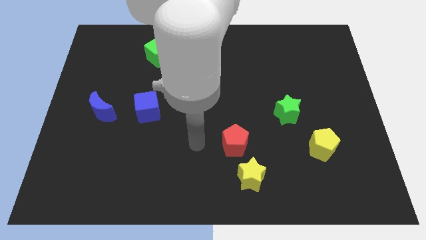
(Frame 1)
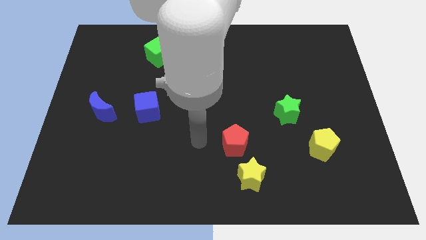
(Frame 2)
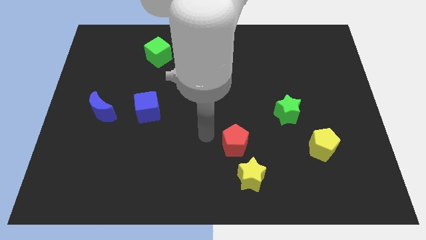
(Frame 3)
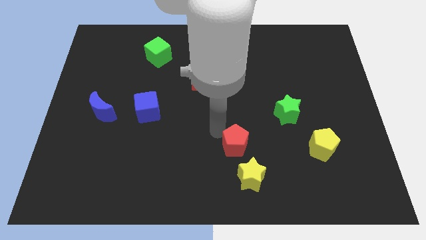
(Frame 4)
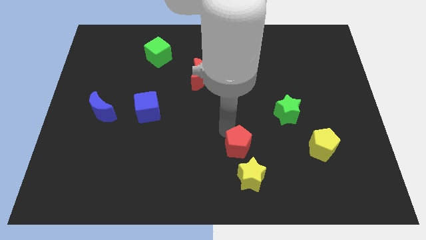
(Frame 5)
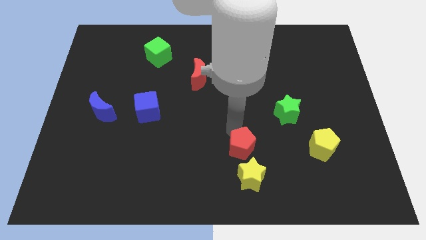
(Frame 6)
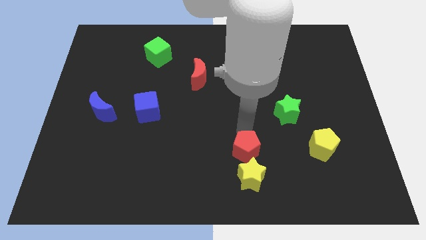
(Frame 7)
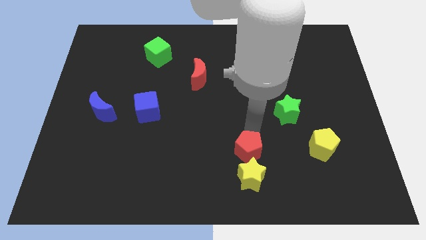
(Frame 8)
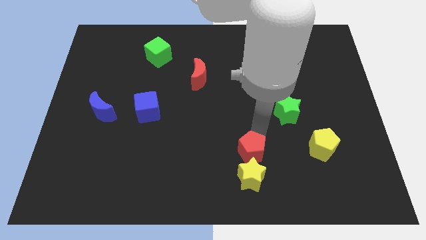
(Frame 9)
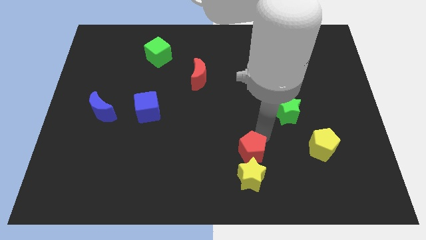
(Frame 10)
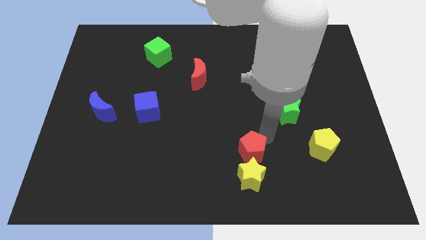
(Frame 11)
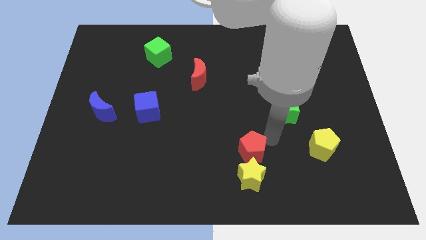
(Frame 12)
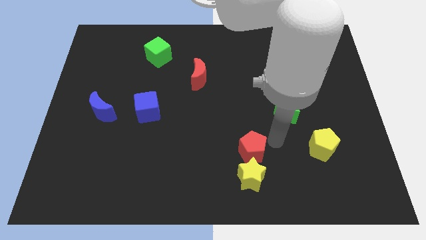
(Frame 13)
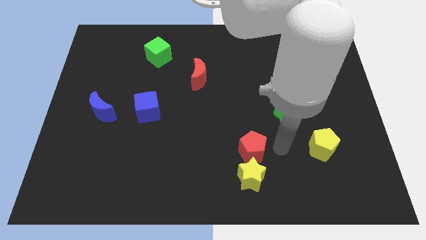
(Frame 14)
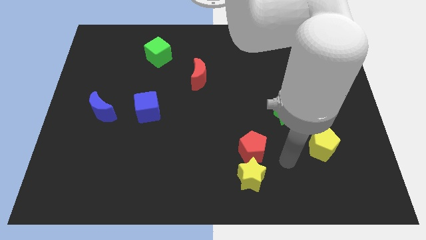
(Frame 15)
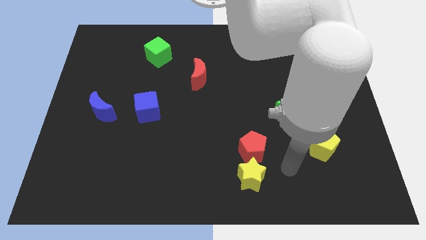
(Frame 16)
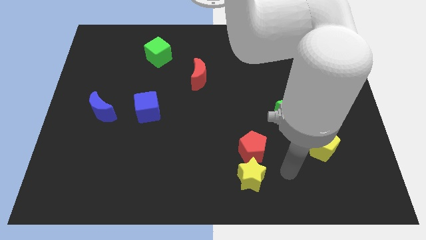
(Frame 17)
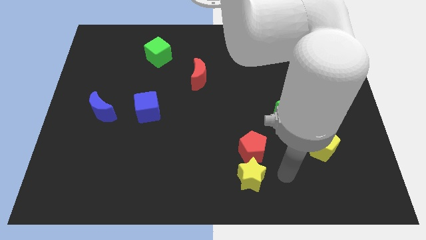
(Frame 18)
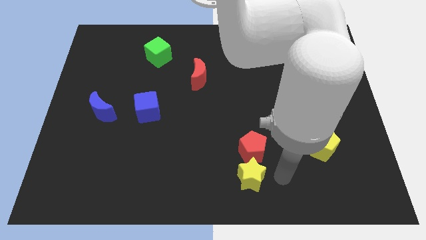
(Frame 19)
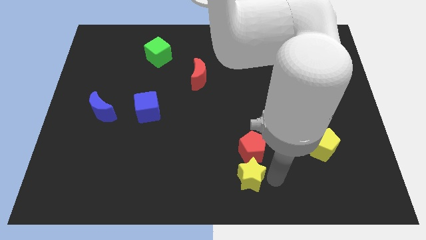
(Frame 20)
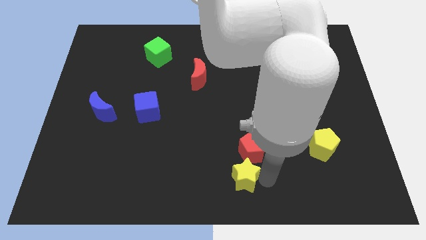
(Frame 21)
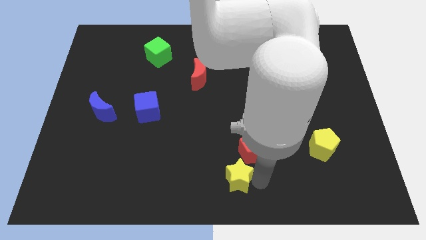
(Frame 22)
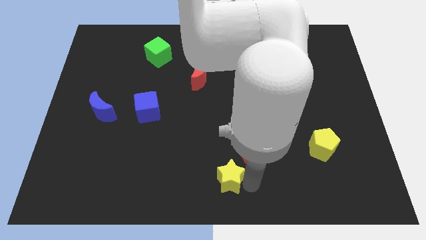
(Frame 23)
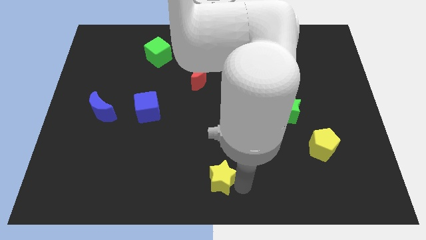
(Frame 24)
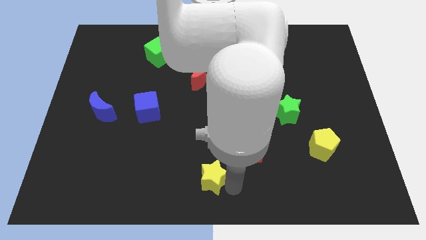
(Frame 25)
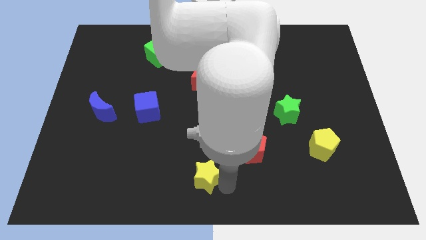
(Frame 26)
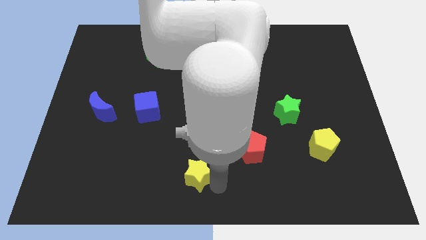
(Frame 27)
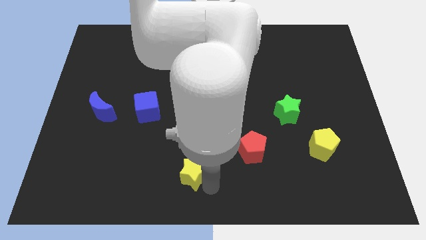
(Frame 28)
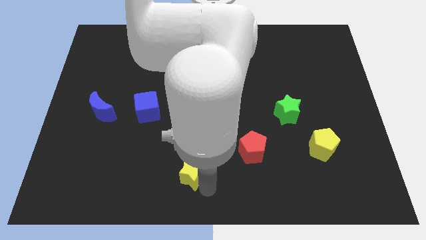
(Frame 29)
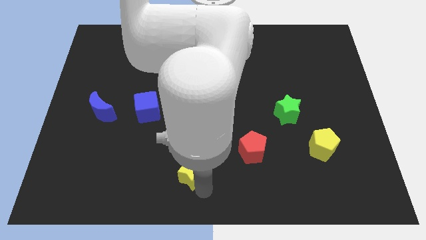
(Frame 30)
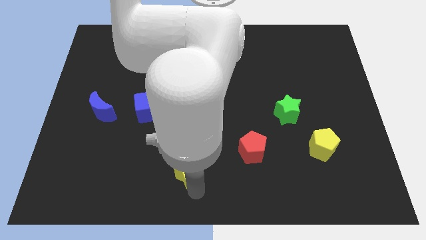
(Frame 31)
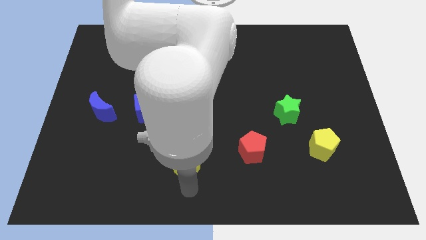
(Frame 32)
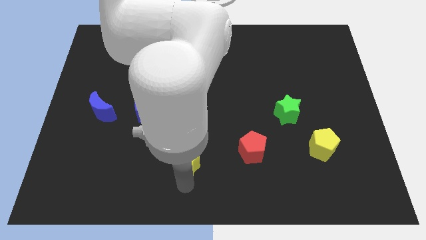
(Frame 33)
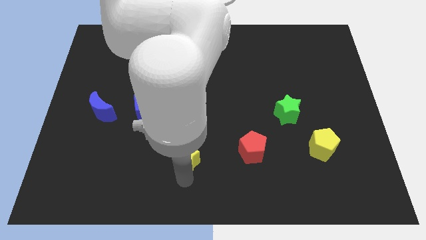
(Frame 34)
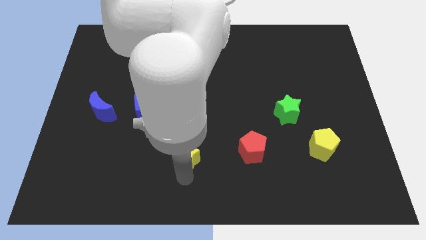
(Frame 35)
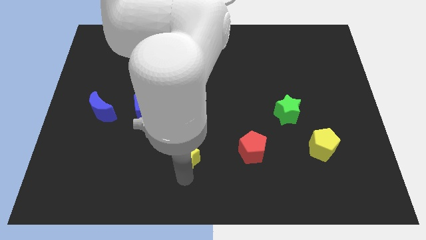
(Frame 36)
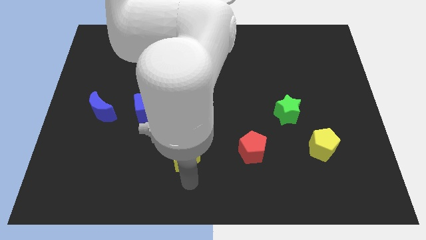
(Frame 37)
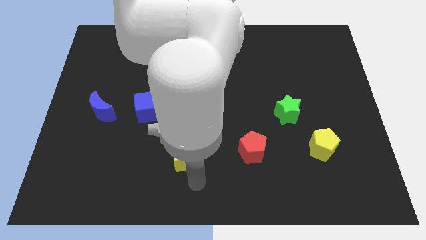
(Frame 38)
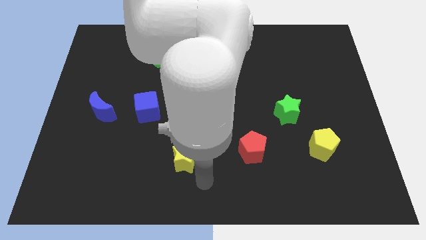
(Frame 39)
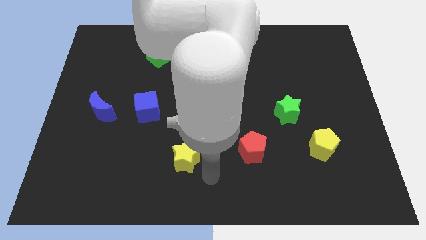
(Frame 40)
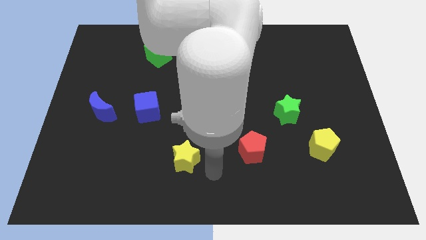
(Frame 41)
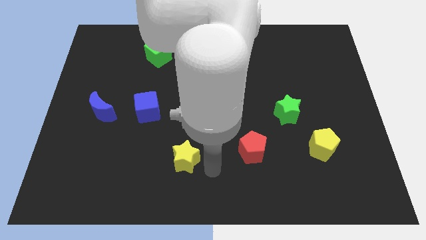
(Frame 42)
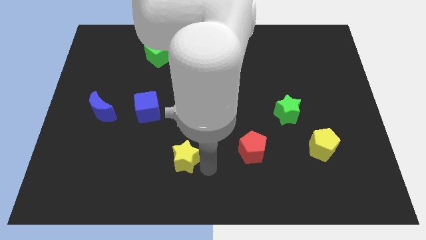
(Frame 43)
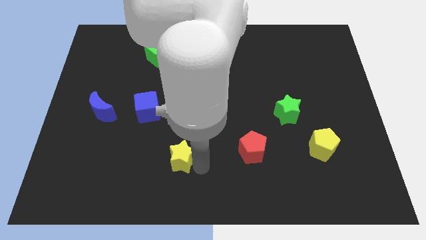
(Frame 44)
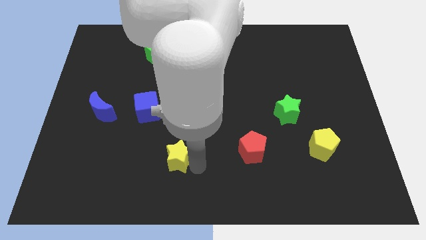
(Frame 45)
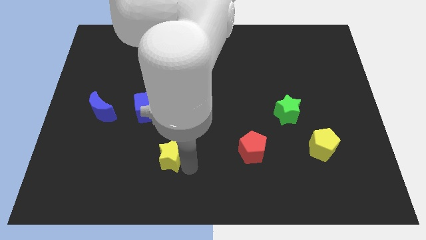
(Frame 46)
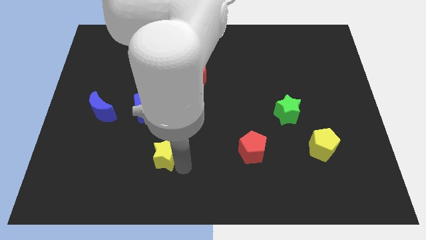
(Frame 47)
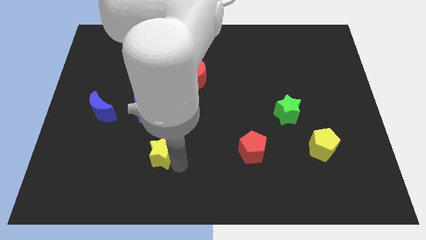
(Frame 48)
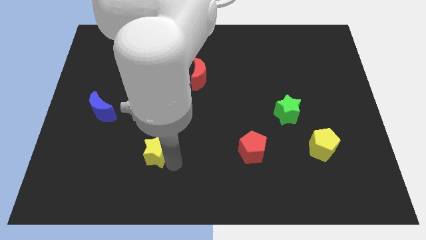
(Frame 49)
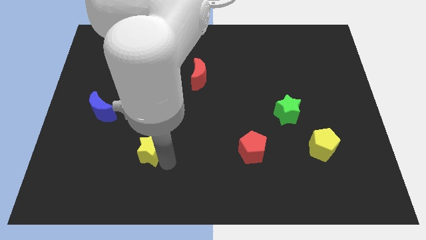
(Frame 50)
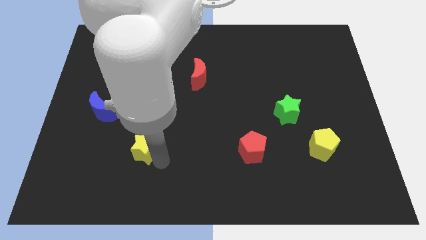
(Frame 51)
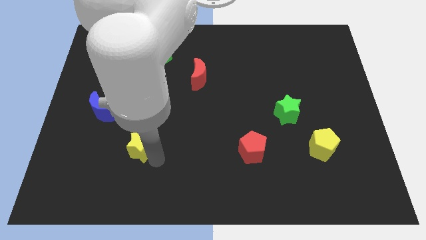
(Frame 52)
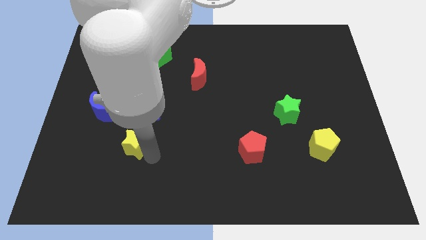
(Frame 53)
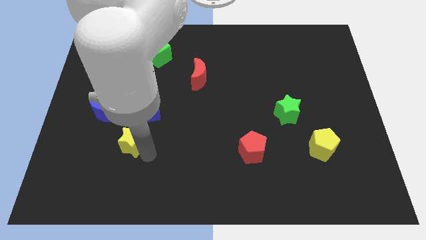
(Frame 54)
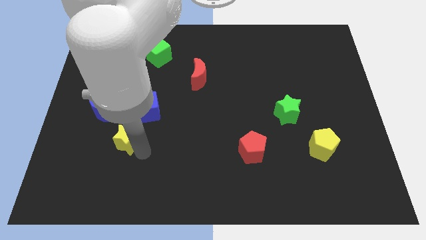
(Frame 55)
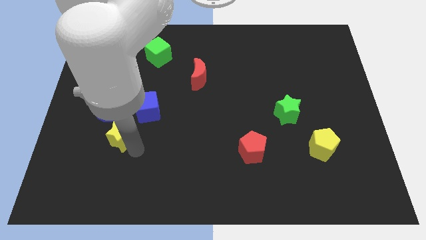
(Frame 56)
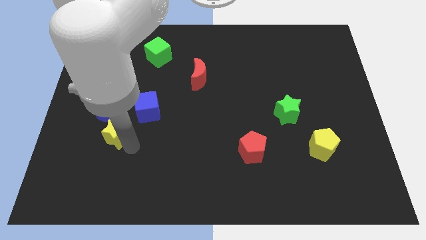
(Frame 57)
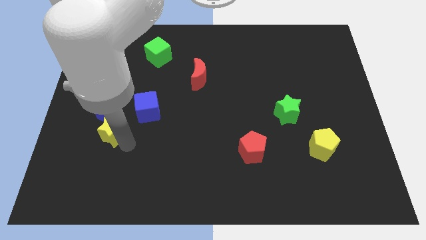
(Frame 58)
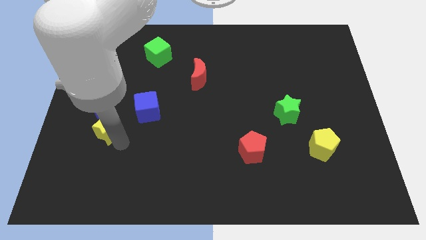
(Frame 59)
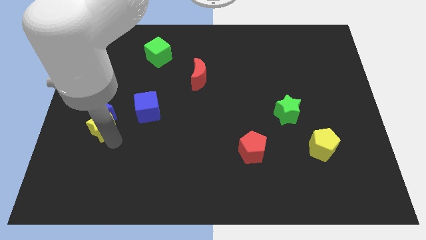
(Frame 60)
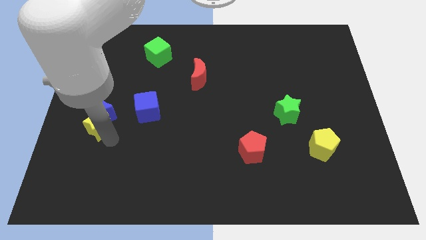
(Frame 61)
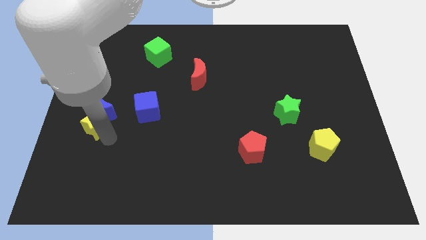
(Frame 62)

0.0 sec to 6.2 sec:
move the yellow star to the blue moon

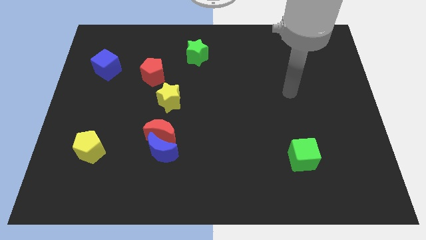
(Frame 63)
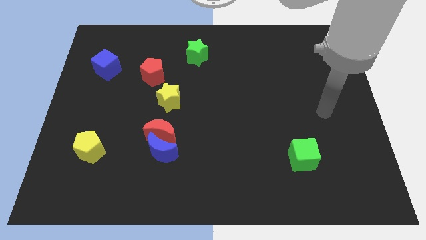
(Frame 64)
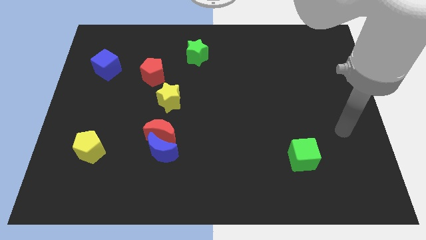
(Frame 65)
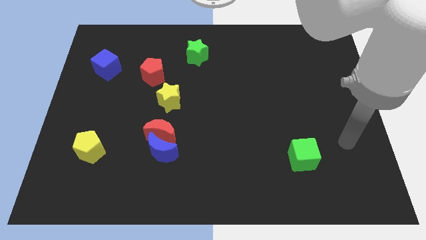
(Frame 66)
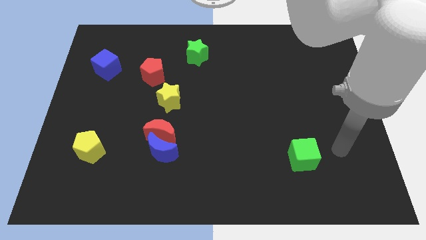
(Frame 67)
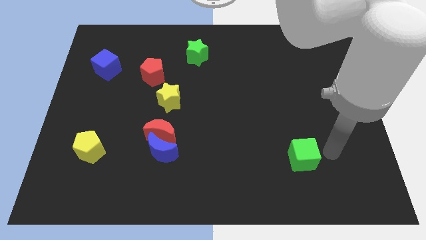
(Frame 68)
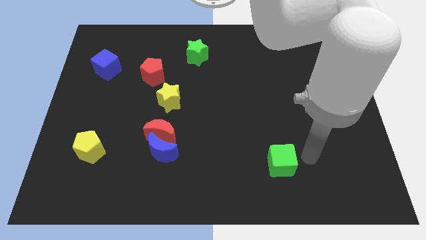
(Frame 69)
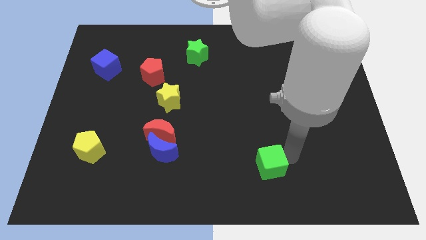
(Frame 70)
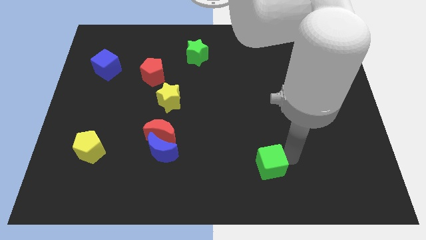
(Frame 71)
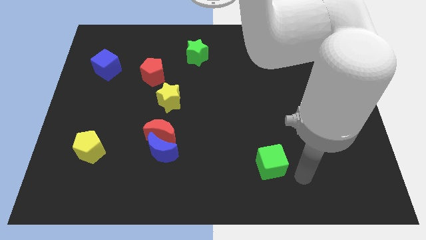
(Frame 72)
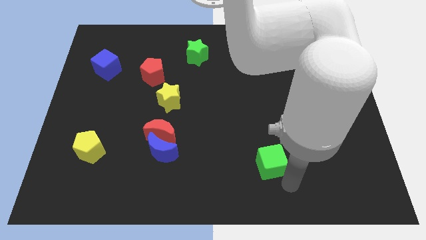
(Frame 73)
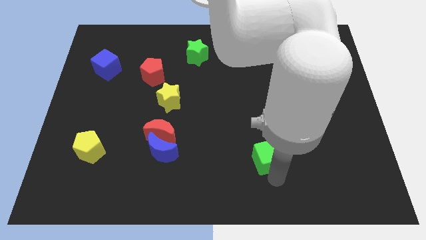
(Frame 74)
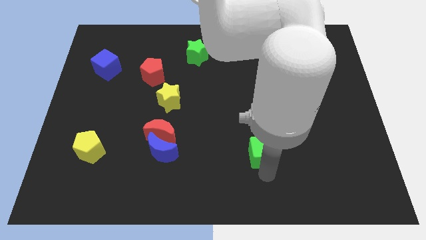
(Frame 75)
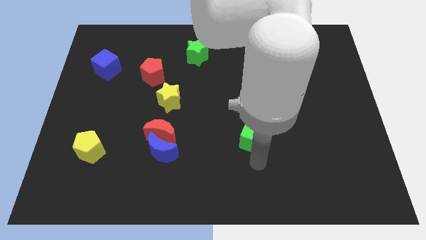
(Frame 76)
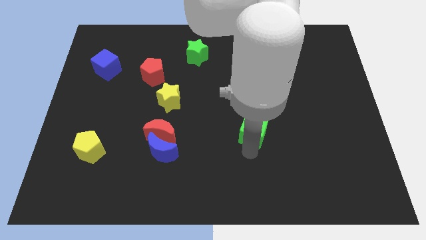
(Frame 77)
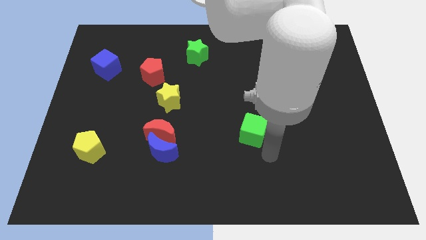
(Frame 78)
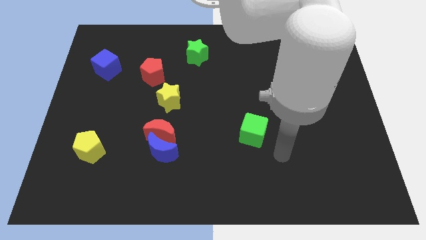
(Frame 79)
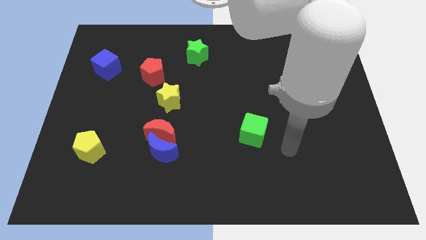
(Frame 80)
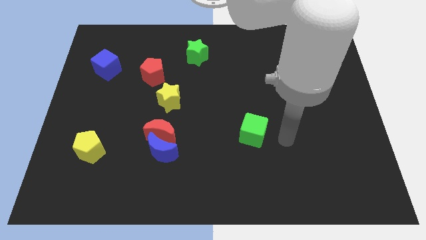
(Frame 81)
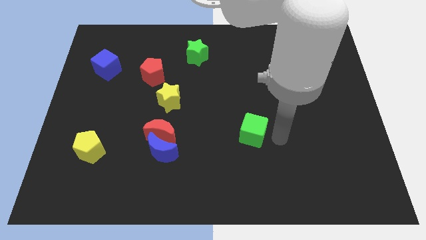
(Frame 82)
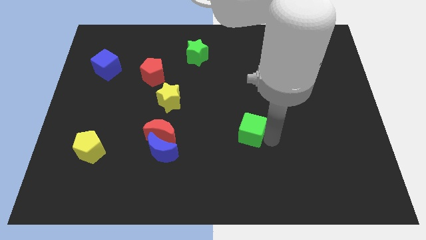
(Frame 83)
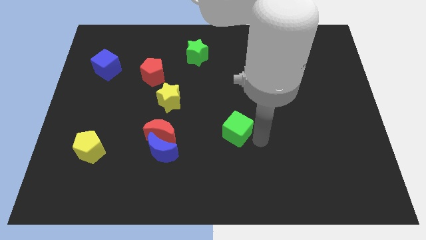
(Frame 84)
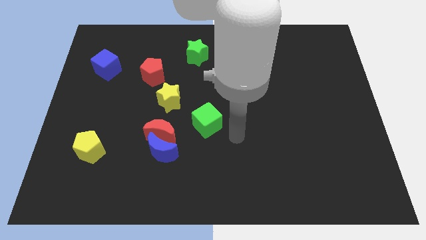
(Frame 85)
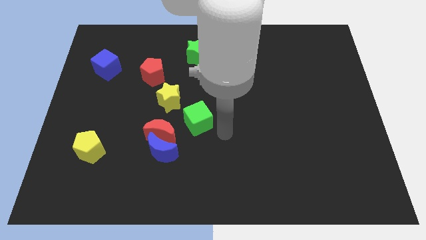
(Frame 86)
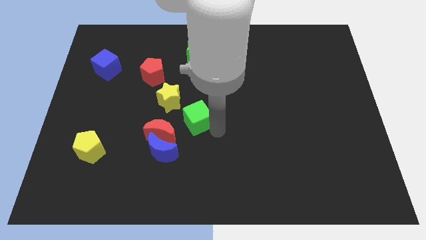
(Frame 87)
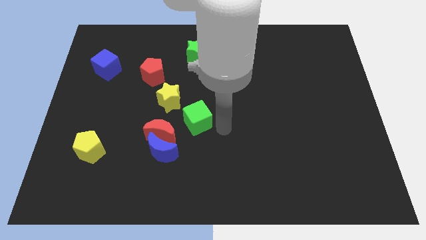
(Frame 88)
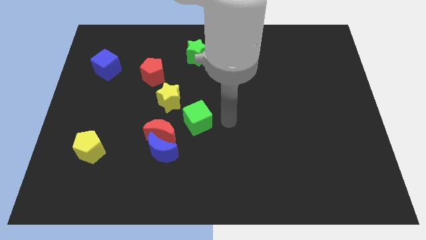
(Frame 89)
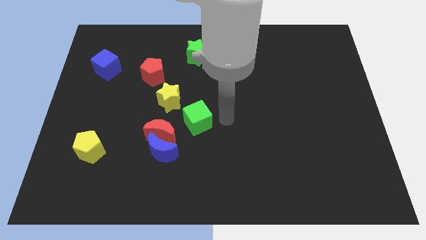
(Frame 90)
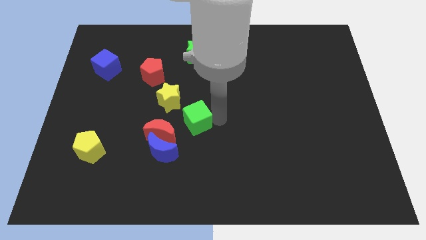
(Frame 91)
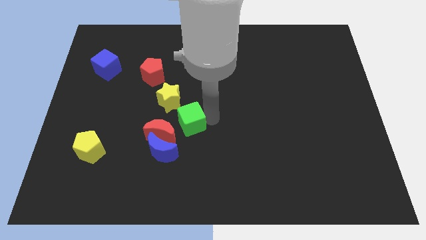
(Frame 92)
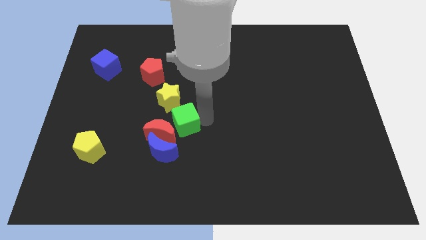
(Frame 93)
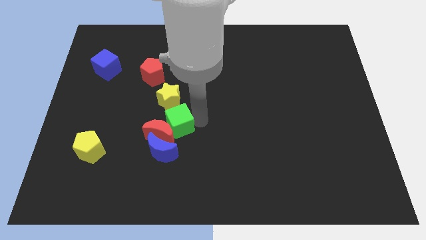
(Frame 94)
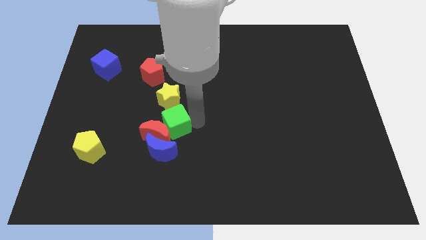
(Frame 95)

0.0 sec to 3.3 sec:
push the green cube towards the red moon
